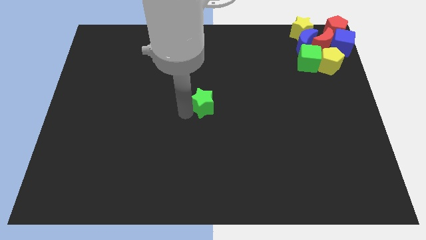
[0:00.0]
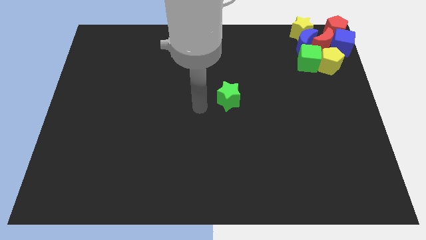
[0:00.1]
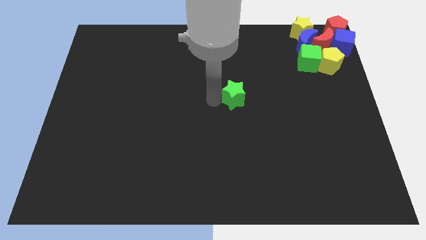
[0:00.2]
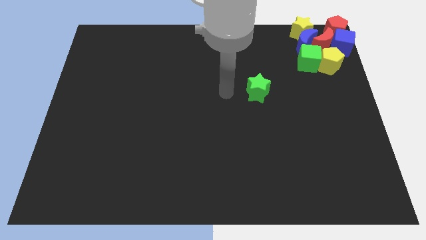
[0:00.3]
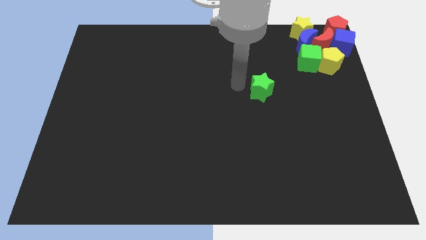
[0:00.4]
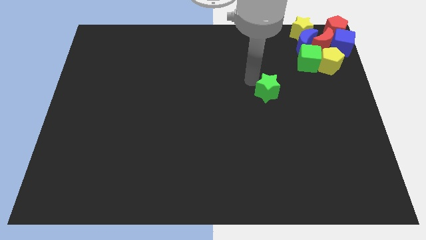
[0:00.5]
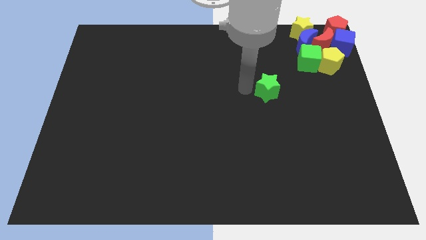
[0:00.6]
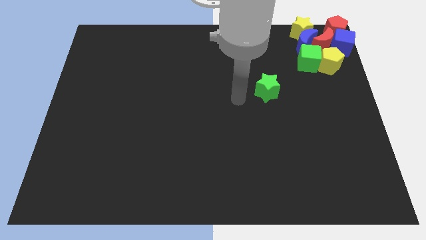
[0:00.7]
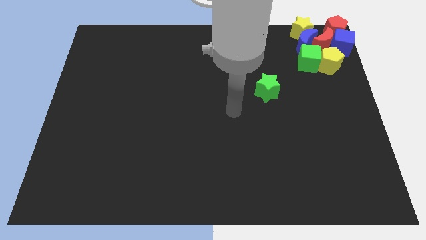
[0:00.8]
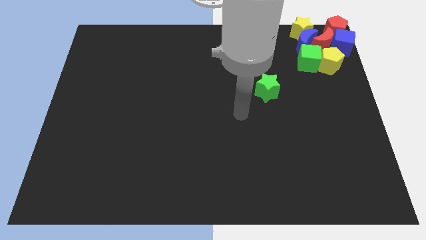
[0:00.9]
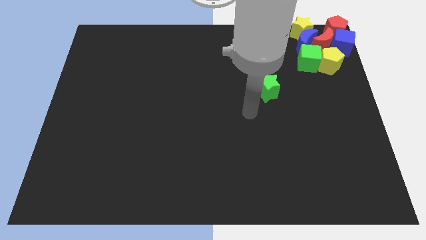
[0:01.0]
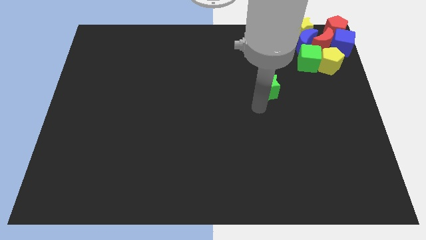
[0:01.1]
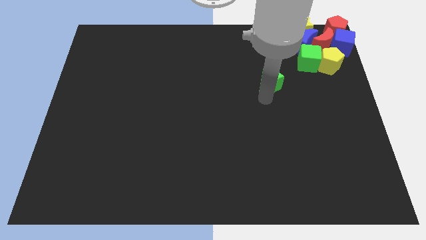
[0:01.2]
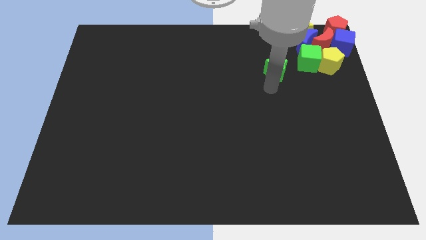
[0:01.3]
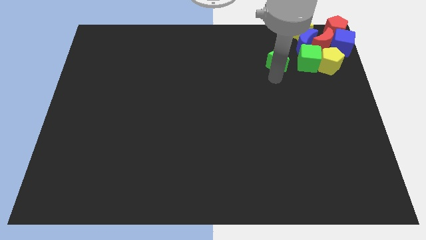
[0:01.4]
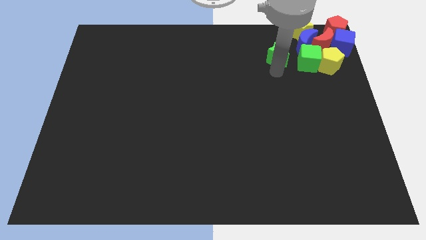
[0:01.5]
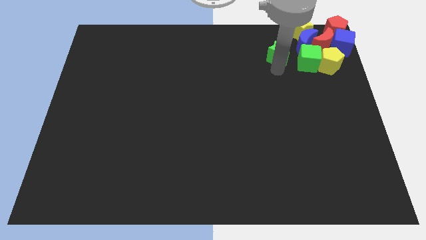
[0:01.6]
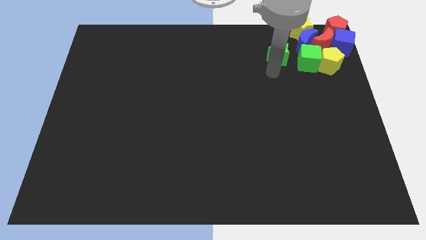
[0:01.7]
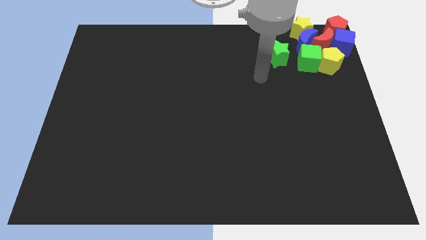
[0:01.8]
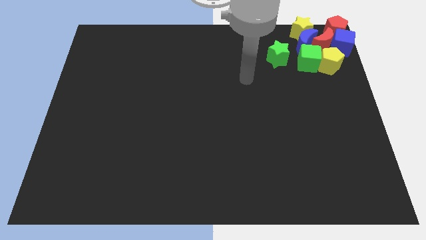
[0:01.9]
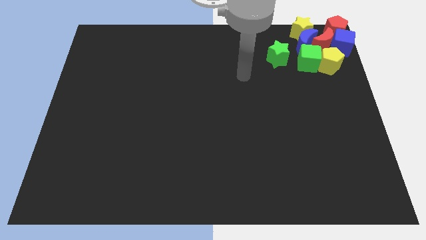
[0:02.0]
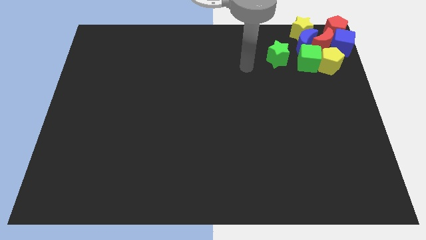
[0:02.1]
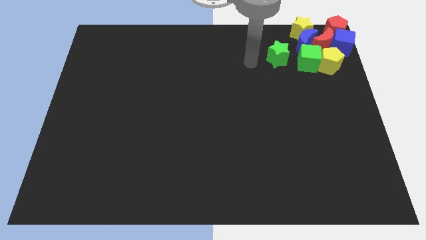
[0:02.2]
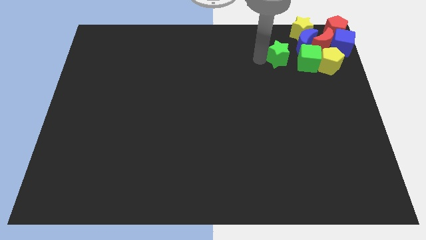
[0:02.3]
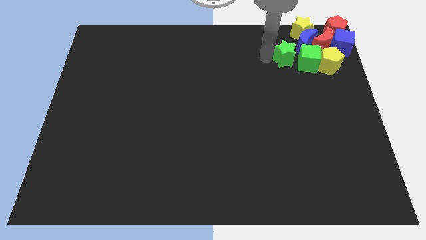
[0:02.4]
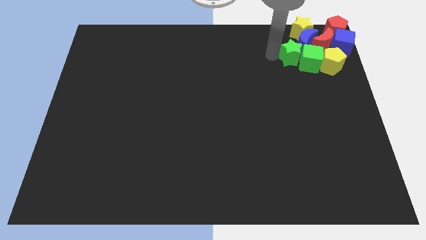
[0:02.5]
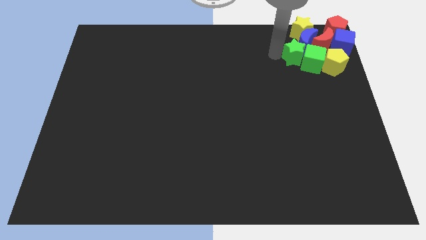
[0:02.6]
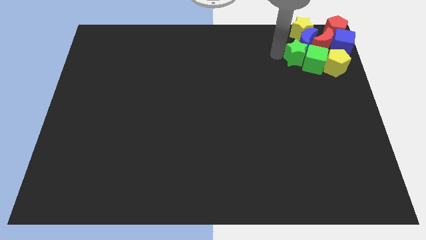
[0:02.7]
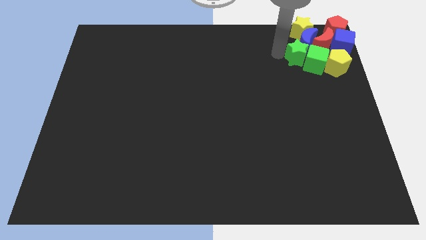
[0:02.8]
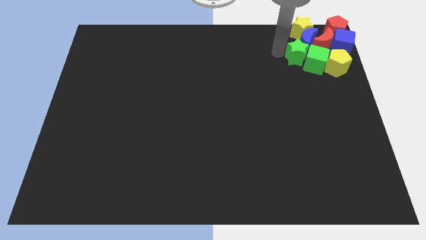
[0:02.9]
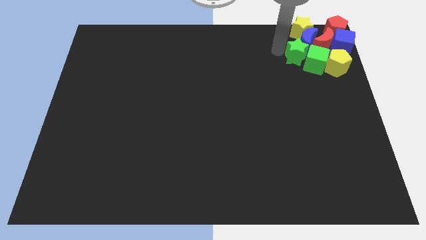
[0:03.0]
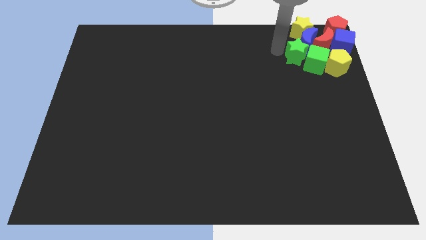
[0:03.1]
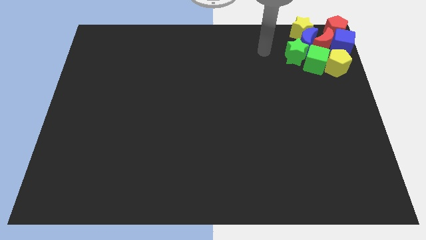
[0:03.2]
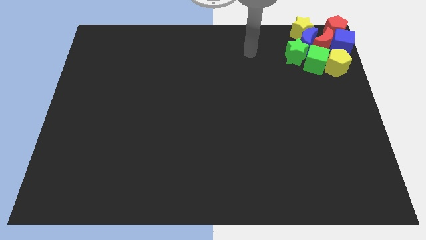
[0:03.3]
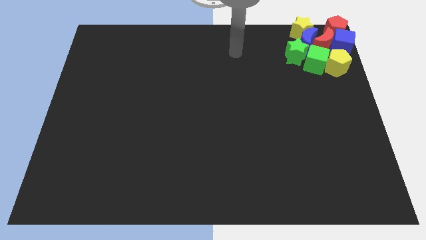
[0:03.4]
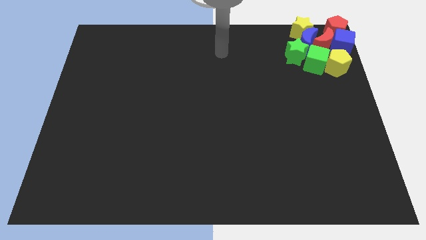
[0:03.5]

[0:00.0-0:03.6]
move all the blocks to the right top of the board

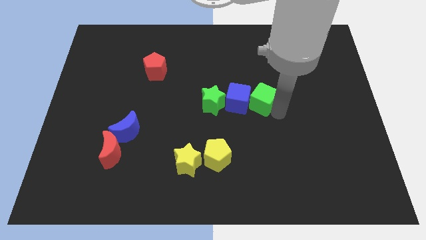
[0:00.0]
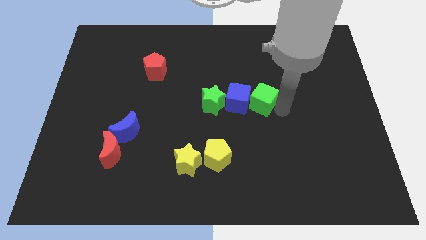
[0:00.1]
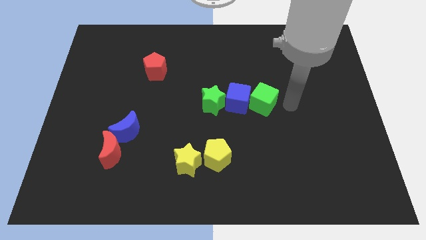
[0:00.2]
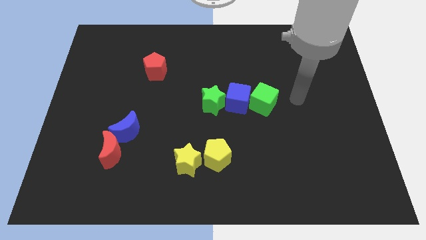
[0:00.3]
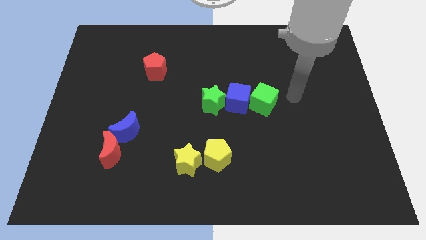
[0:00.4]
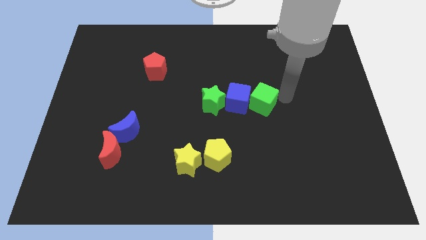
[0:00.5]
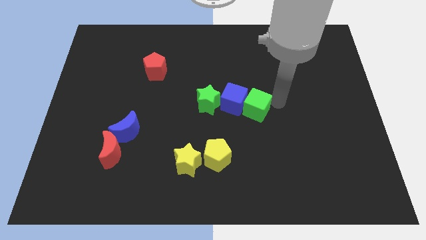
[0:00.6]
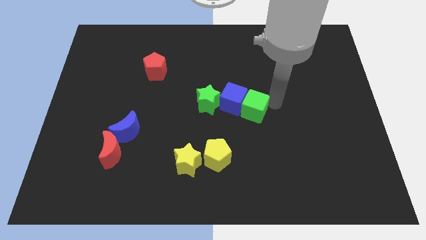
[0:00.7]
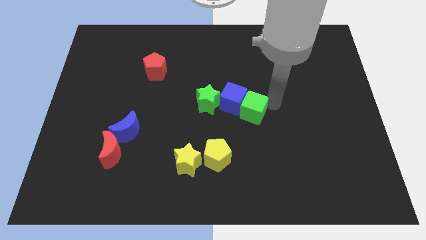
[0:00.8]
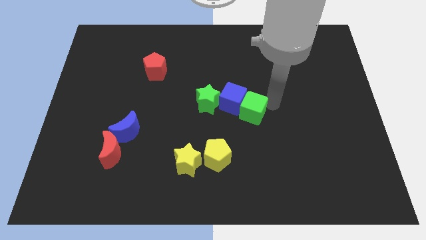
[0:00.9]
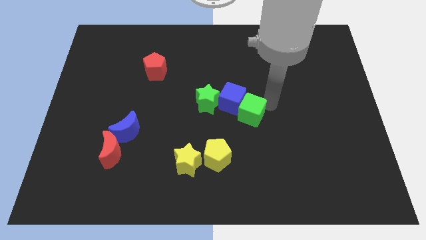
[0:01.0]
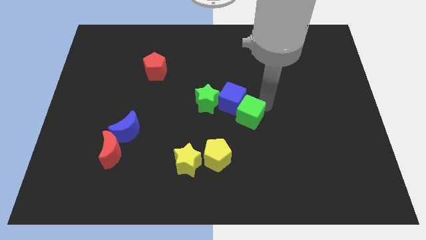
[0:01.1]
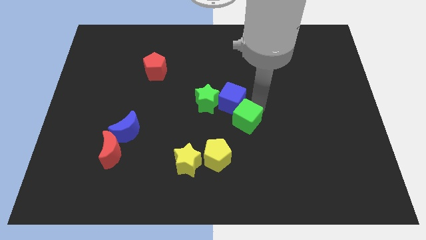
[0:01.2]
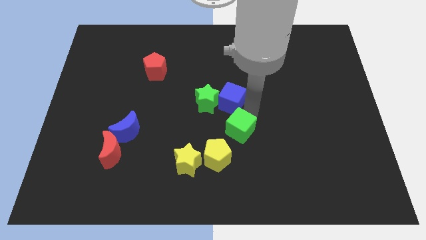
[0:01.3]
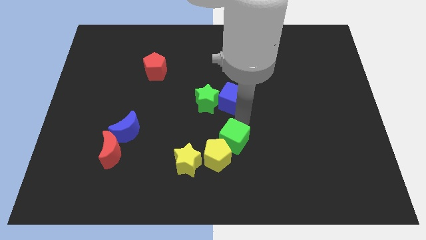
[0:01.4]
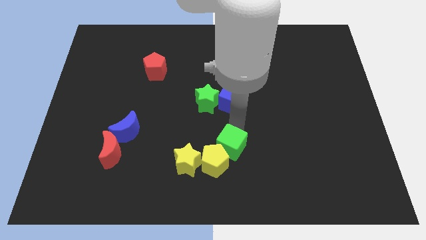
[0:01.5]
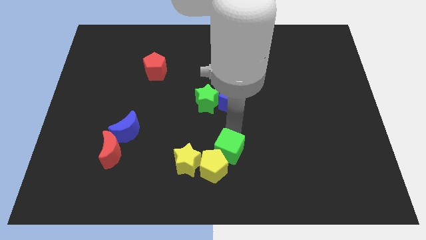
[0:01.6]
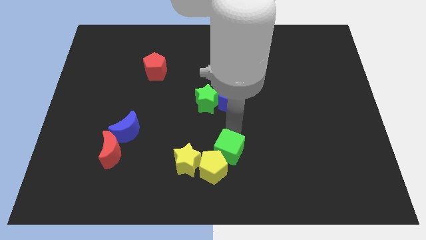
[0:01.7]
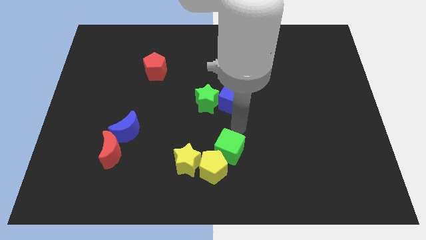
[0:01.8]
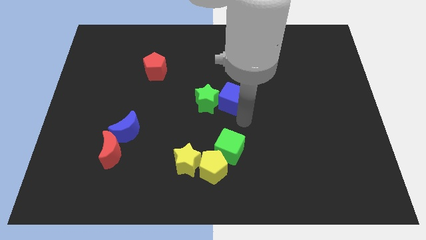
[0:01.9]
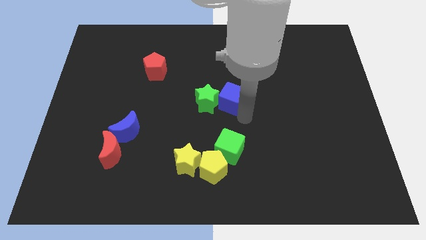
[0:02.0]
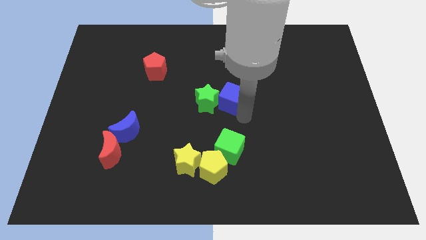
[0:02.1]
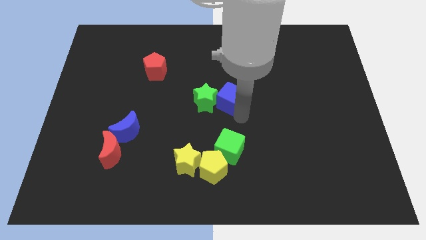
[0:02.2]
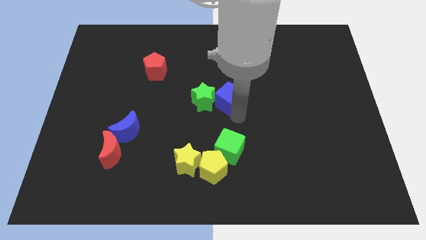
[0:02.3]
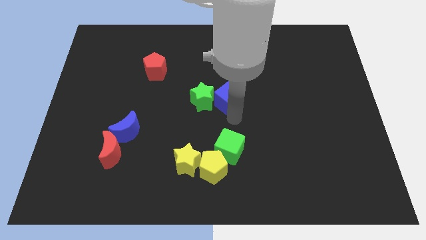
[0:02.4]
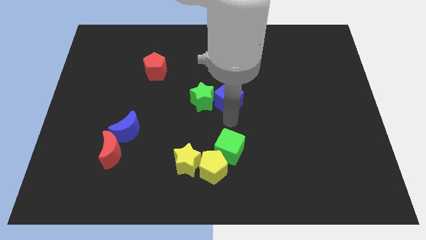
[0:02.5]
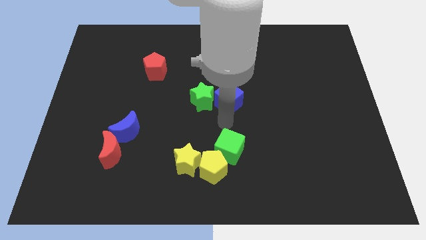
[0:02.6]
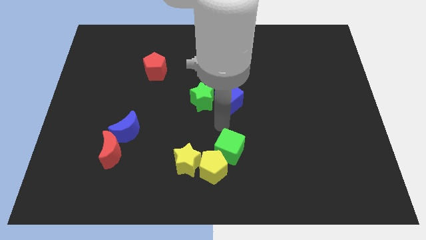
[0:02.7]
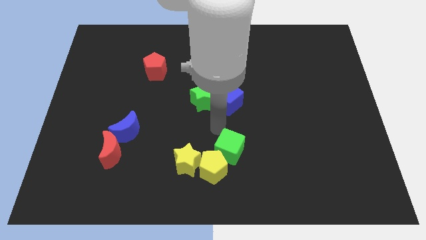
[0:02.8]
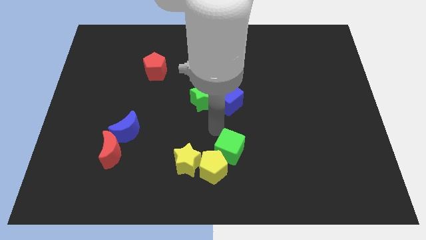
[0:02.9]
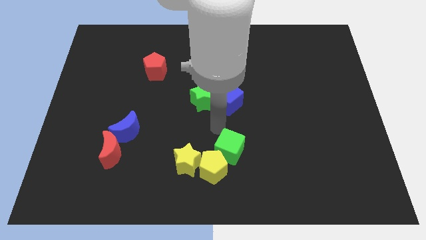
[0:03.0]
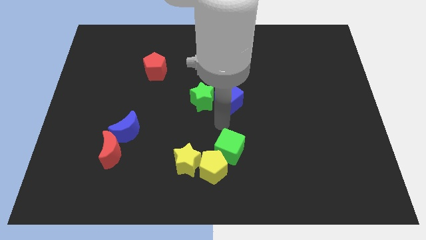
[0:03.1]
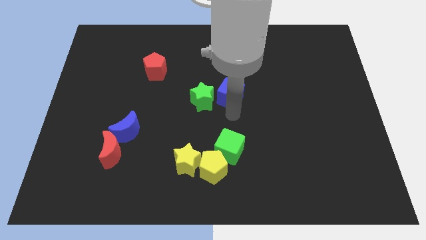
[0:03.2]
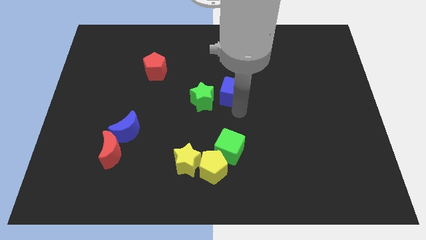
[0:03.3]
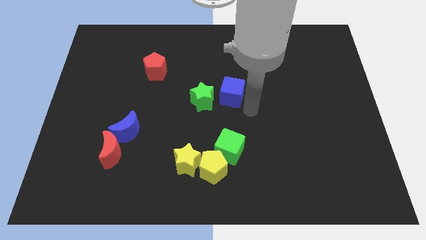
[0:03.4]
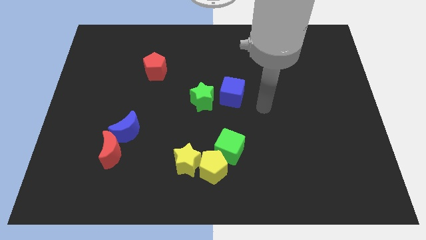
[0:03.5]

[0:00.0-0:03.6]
move the green cube above the yellow pentagon

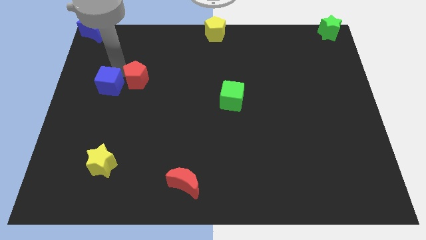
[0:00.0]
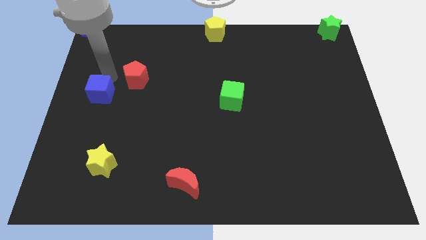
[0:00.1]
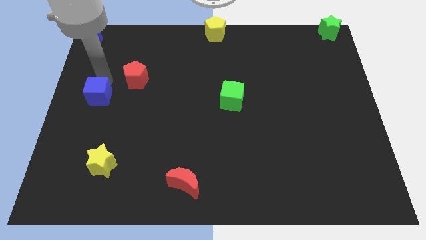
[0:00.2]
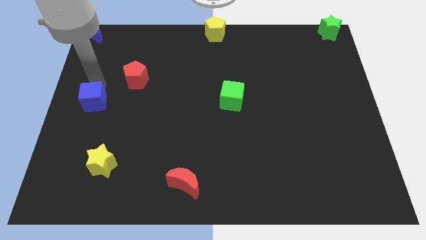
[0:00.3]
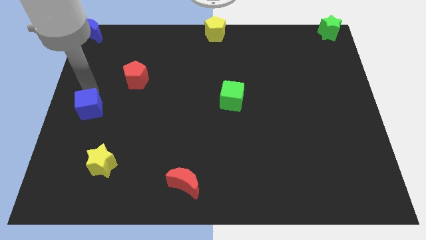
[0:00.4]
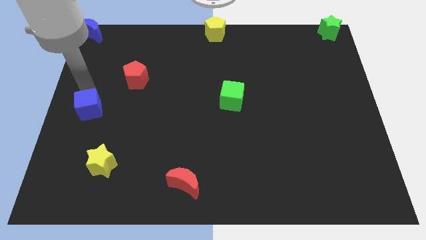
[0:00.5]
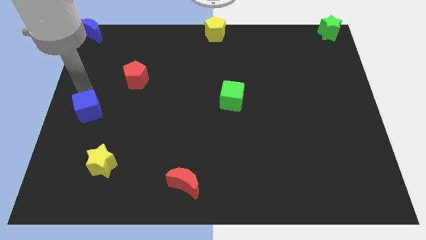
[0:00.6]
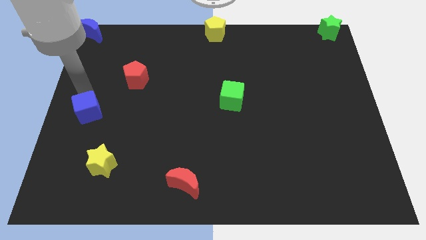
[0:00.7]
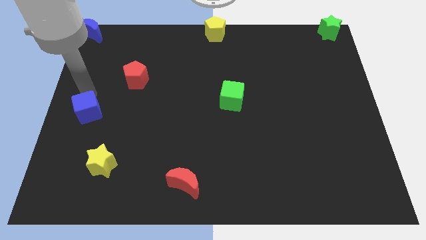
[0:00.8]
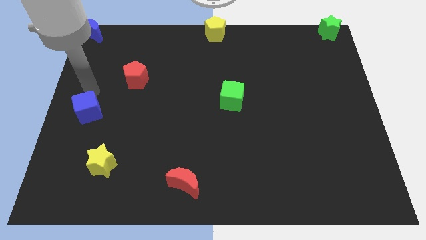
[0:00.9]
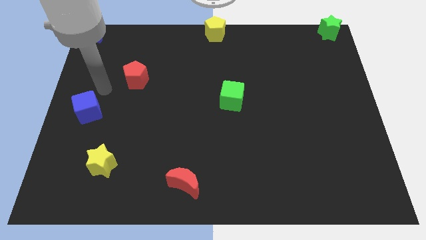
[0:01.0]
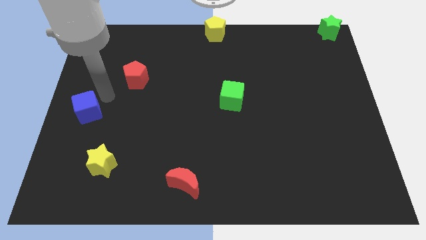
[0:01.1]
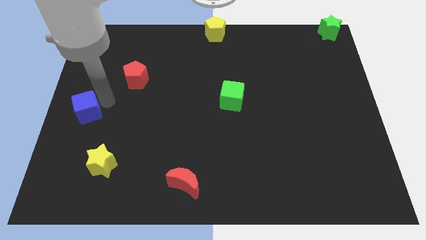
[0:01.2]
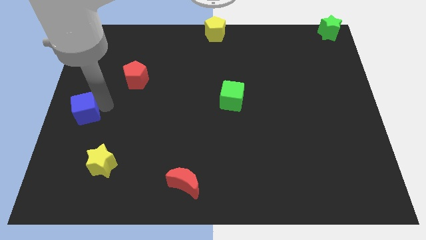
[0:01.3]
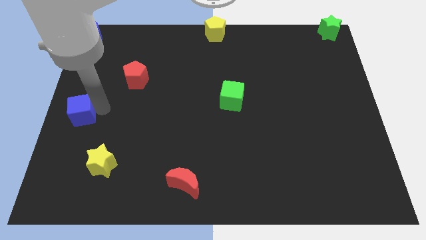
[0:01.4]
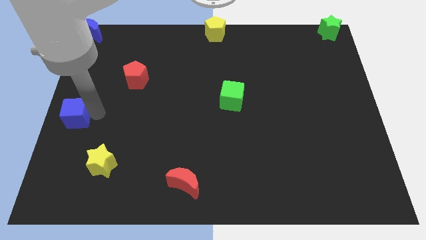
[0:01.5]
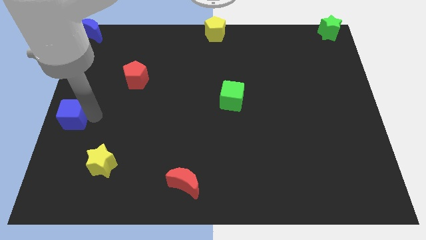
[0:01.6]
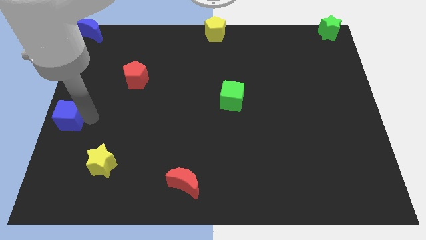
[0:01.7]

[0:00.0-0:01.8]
separate the blue cube from red pentagon
